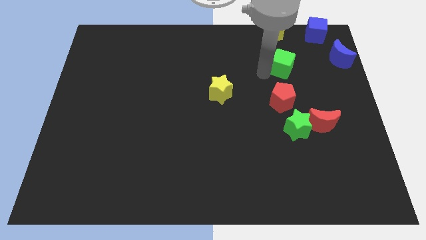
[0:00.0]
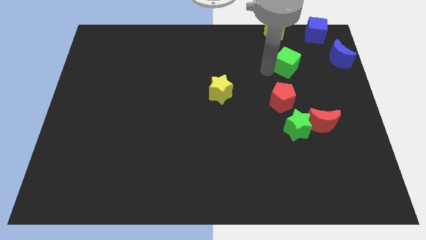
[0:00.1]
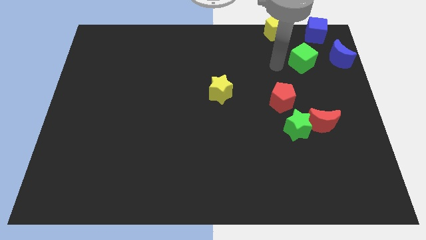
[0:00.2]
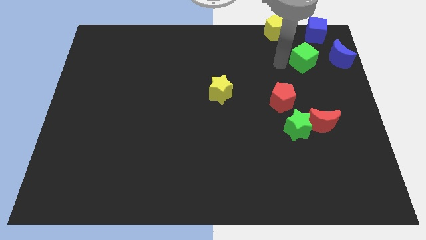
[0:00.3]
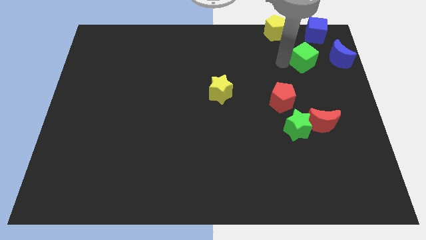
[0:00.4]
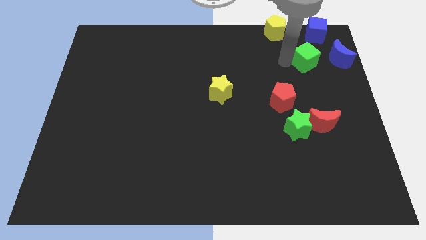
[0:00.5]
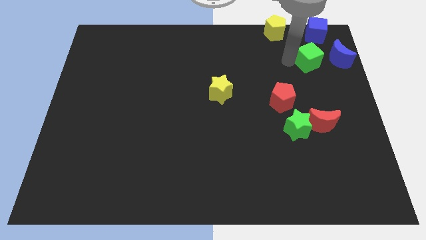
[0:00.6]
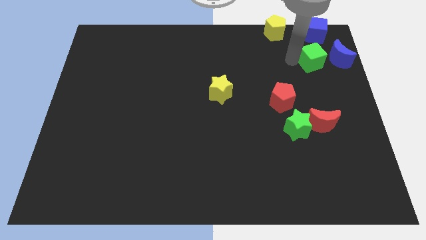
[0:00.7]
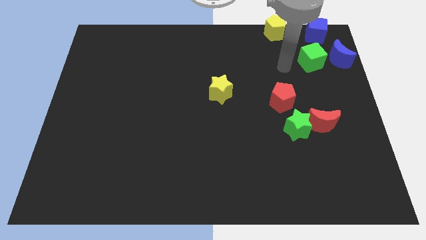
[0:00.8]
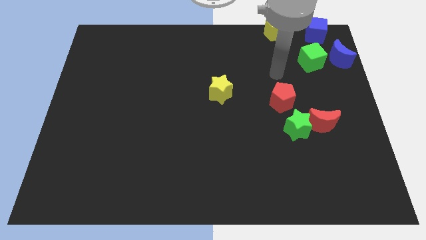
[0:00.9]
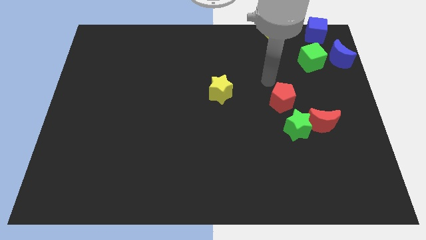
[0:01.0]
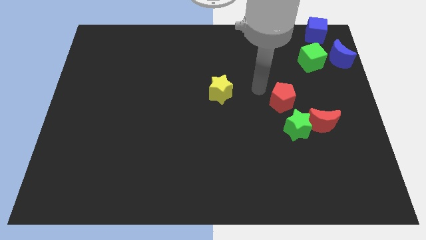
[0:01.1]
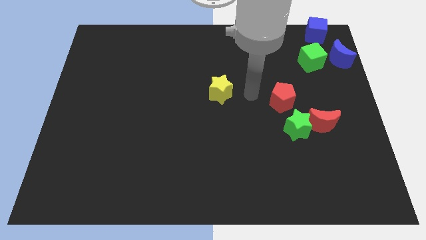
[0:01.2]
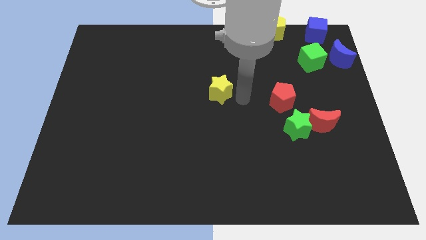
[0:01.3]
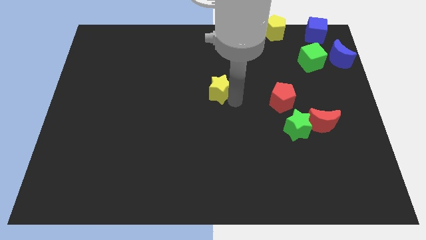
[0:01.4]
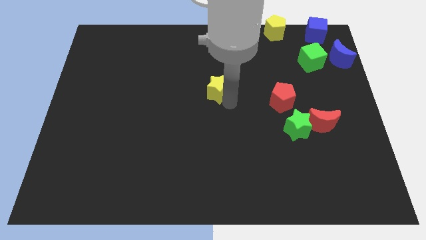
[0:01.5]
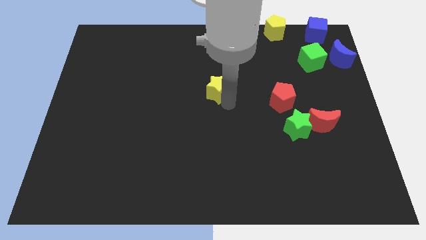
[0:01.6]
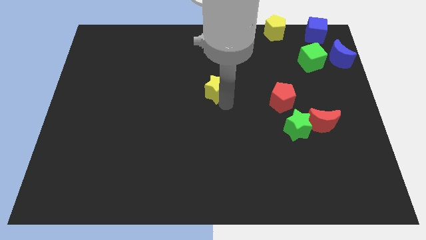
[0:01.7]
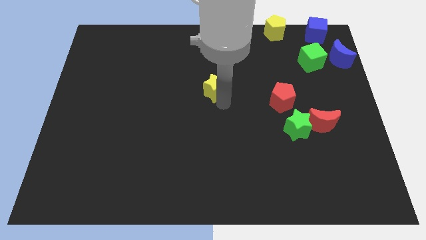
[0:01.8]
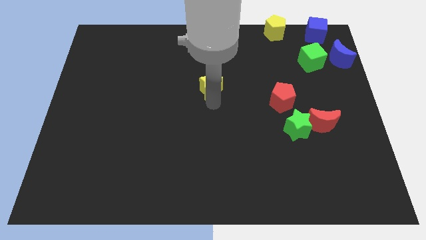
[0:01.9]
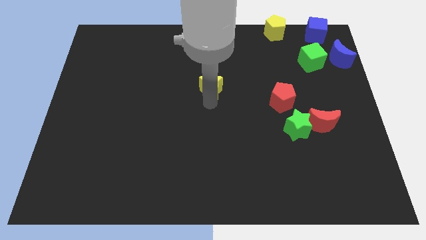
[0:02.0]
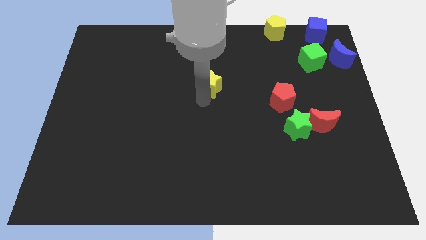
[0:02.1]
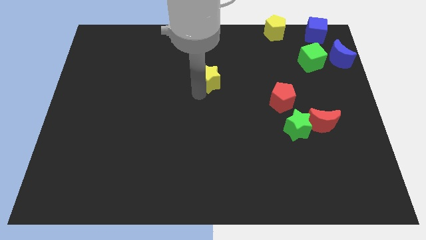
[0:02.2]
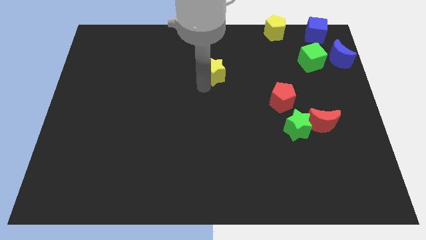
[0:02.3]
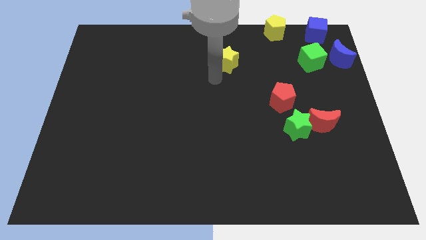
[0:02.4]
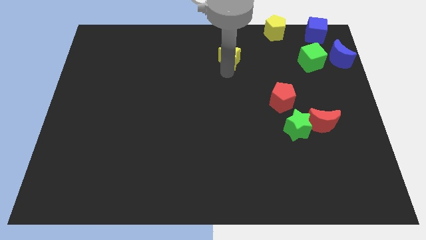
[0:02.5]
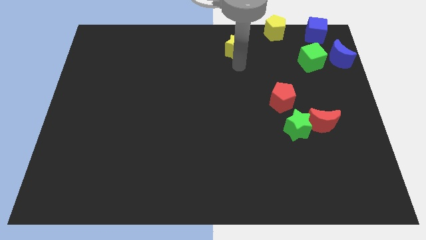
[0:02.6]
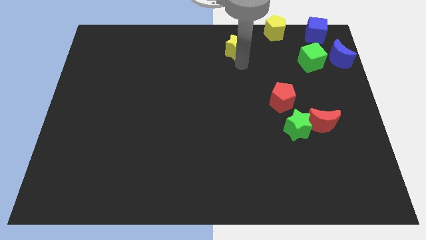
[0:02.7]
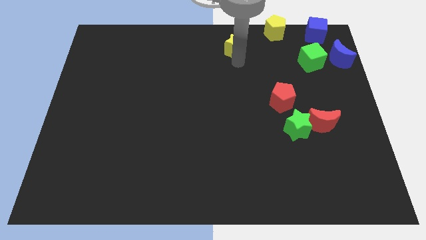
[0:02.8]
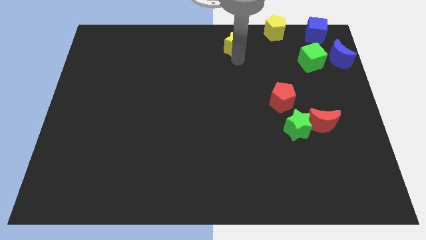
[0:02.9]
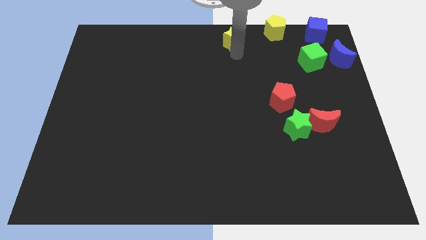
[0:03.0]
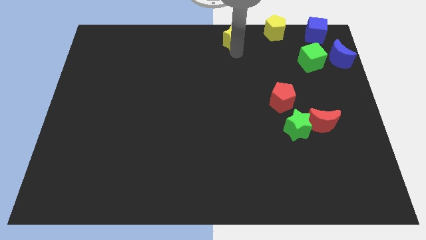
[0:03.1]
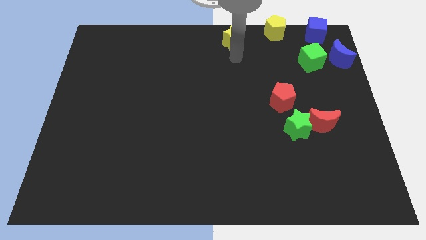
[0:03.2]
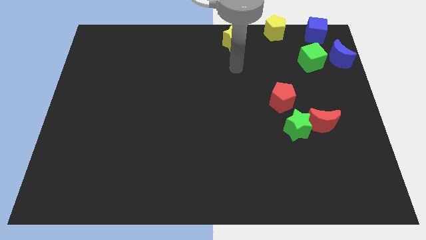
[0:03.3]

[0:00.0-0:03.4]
slightly push the yellow star upwards

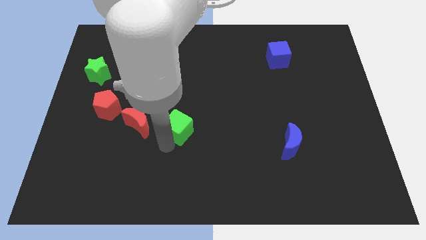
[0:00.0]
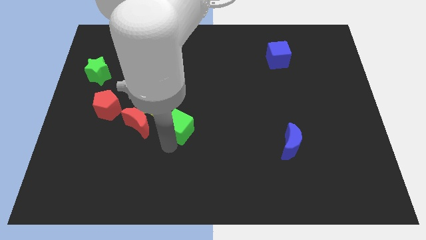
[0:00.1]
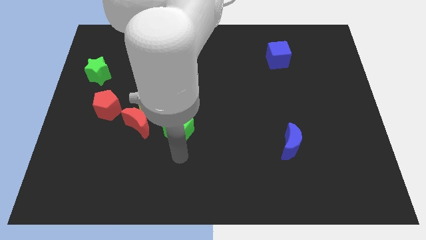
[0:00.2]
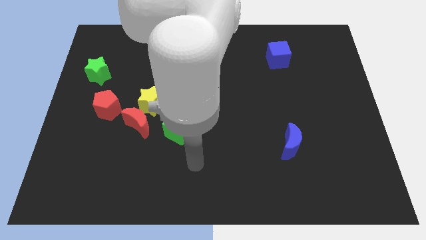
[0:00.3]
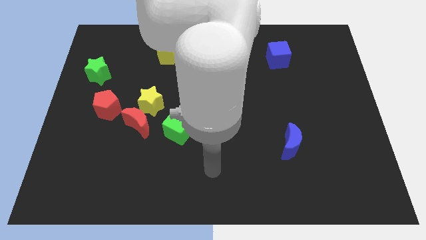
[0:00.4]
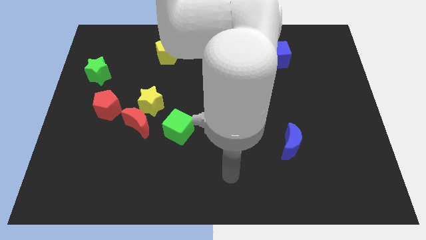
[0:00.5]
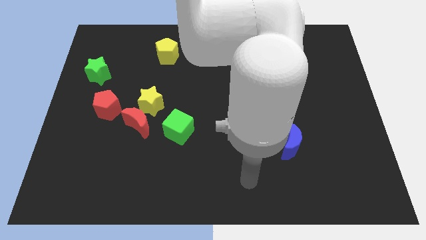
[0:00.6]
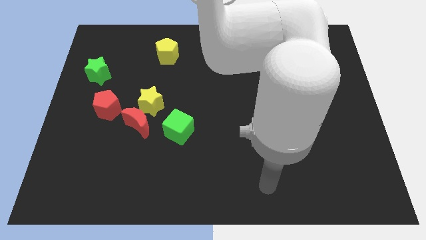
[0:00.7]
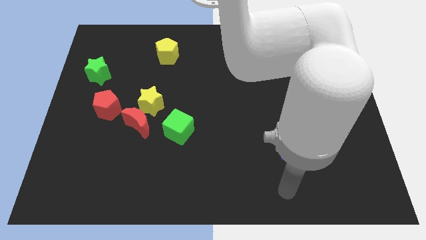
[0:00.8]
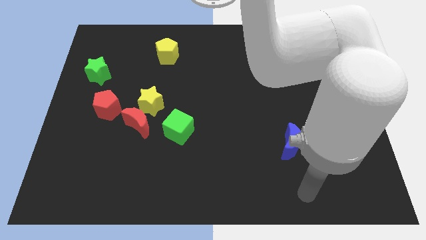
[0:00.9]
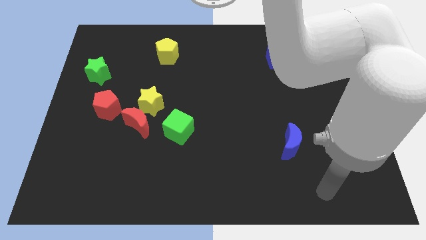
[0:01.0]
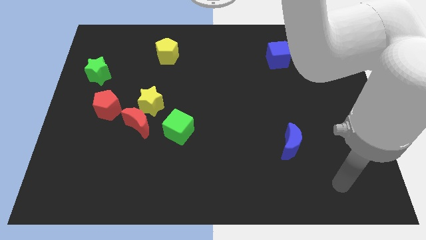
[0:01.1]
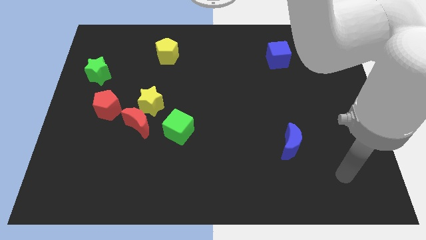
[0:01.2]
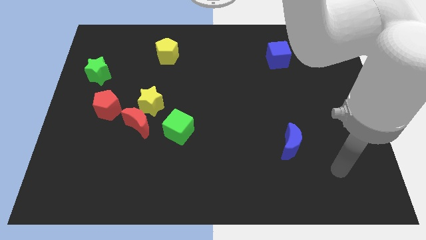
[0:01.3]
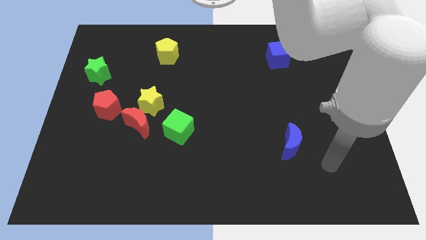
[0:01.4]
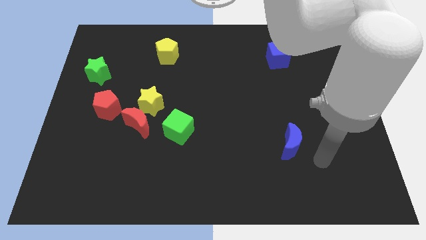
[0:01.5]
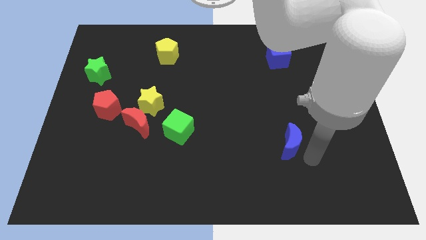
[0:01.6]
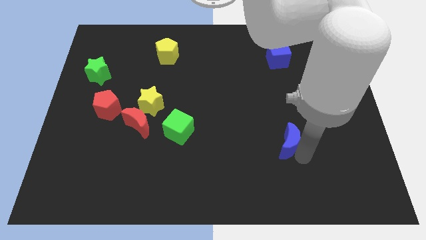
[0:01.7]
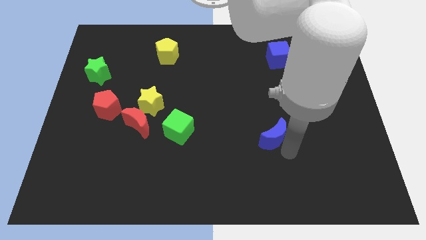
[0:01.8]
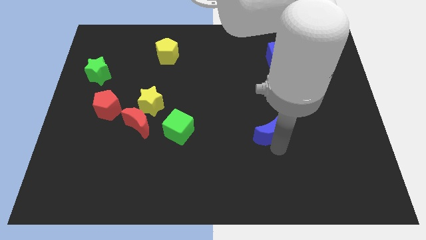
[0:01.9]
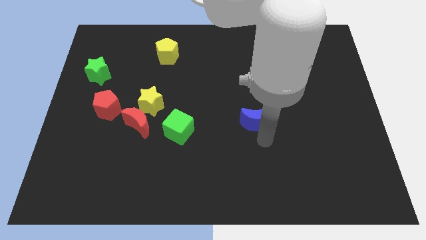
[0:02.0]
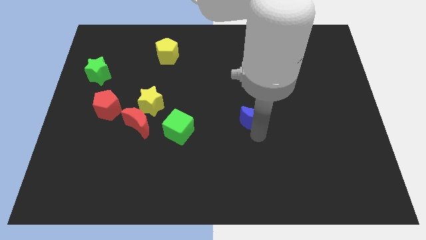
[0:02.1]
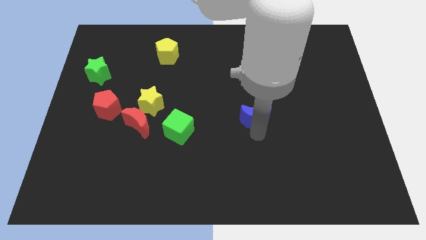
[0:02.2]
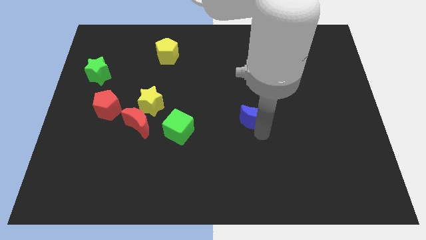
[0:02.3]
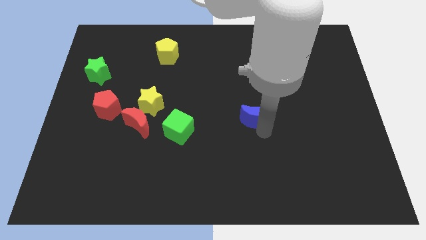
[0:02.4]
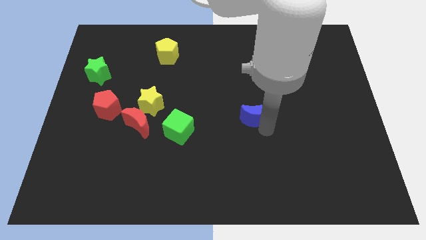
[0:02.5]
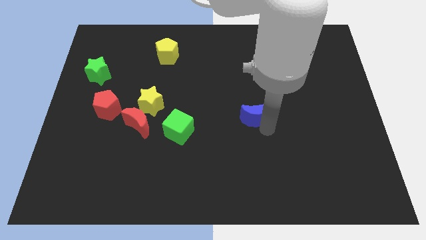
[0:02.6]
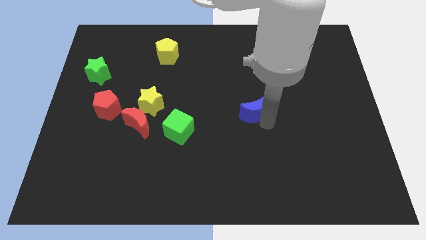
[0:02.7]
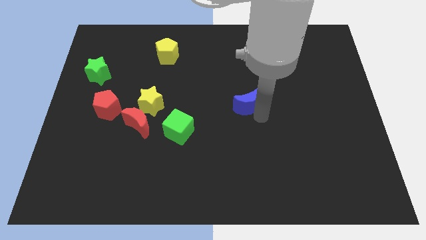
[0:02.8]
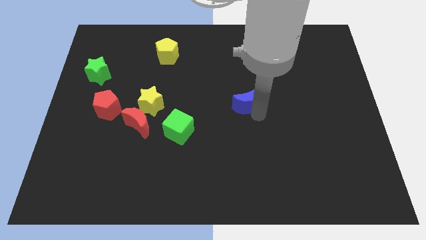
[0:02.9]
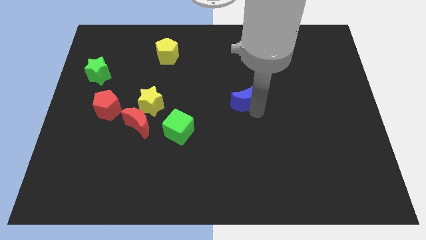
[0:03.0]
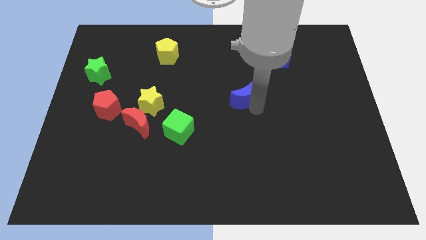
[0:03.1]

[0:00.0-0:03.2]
push blue crescent slightly towards up

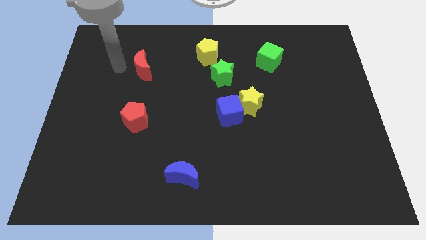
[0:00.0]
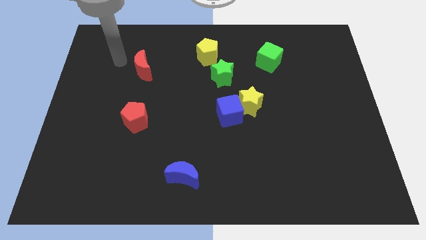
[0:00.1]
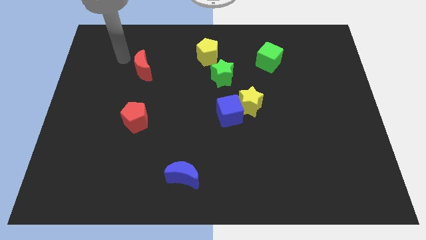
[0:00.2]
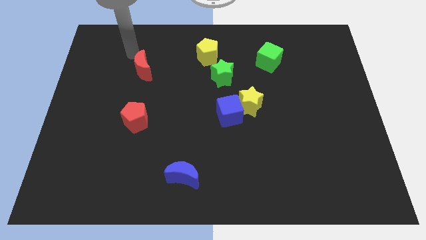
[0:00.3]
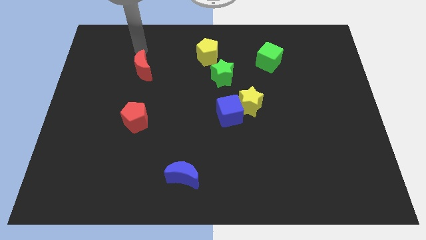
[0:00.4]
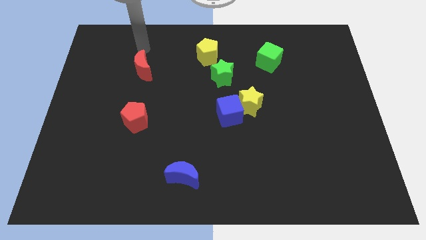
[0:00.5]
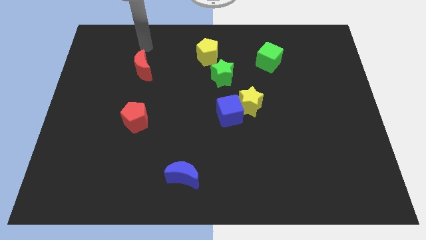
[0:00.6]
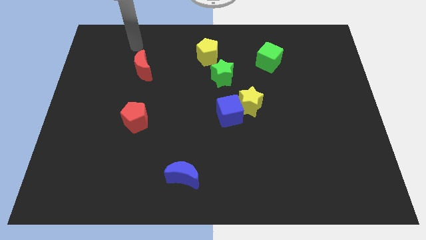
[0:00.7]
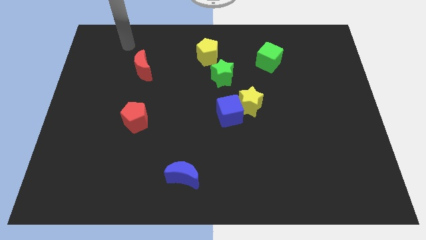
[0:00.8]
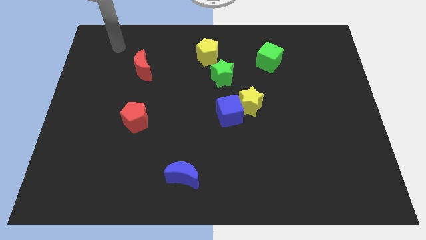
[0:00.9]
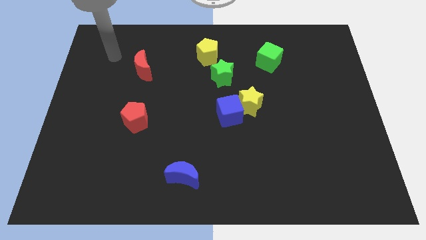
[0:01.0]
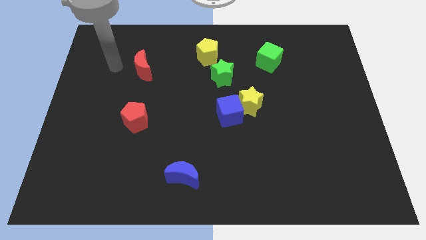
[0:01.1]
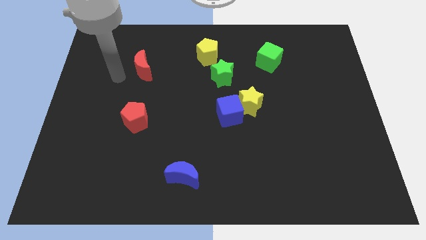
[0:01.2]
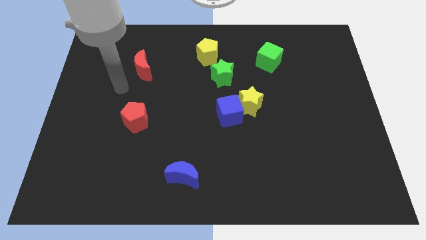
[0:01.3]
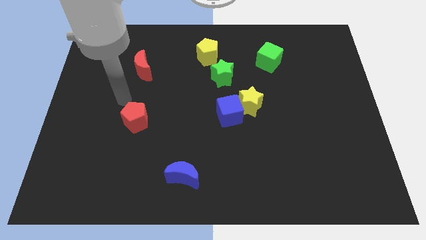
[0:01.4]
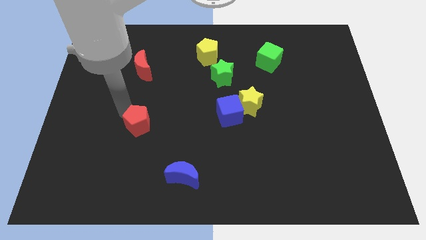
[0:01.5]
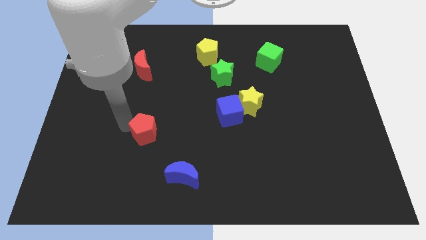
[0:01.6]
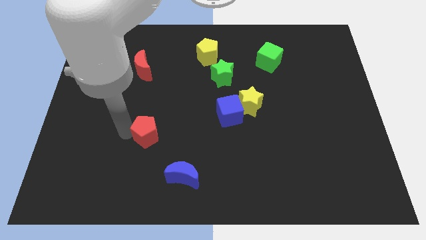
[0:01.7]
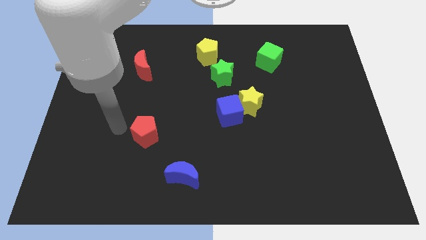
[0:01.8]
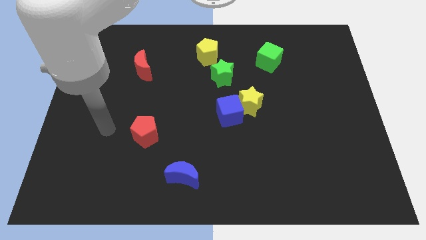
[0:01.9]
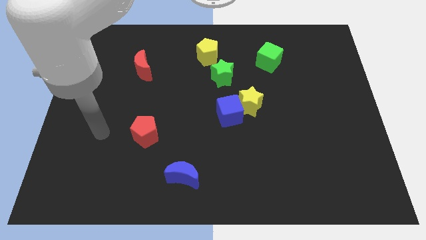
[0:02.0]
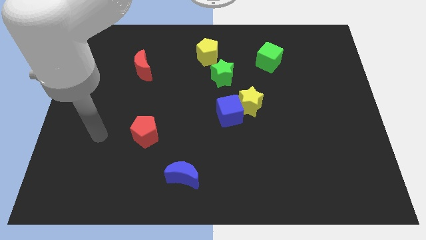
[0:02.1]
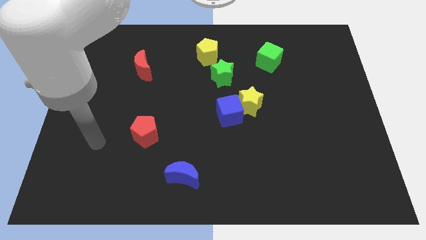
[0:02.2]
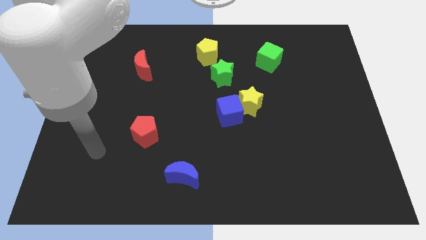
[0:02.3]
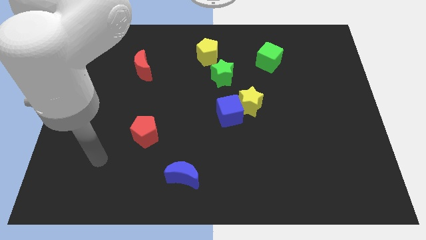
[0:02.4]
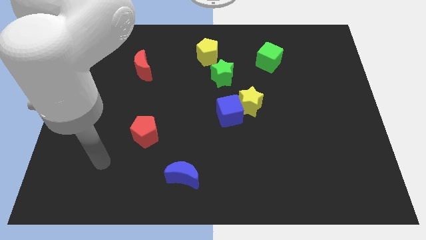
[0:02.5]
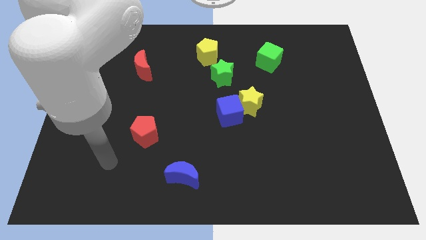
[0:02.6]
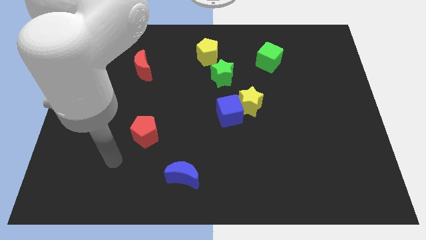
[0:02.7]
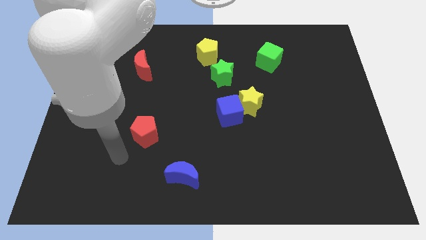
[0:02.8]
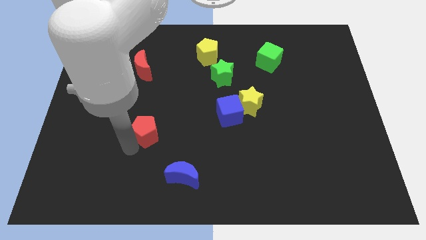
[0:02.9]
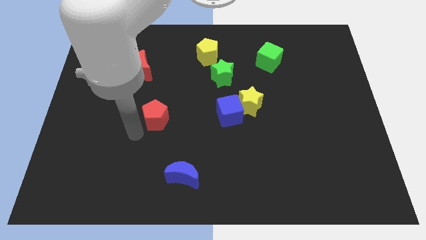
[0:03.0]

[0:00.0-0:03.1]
move red pentagon in between blue and red moons
